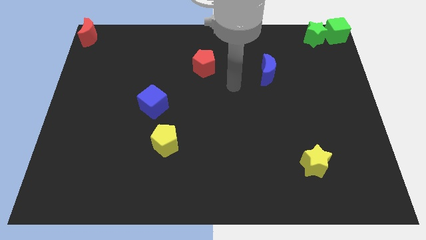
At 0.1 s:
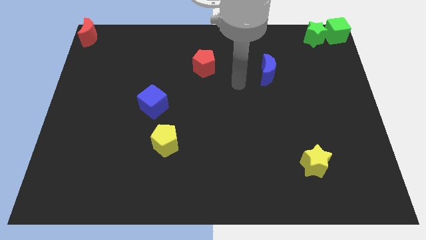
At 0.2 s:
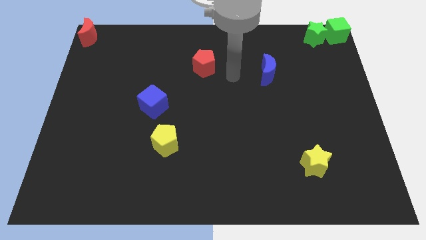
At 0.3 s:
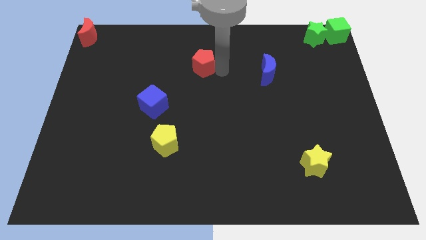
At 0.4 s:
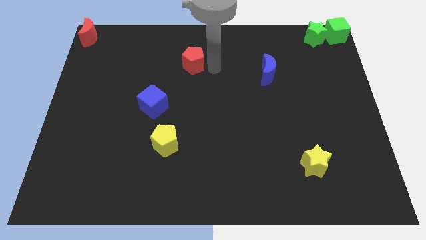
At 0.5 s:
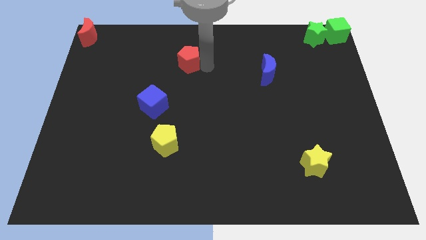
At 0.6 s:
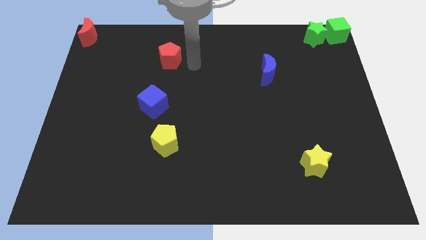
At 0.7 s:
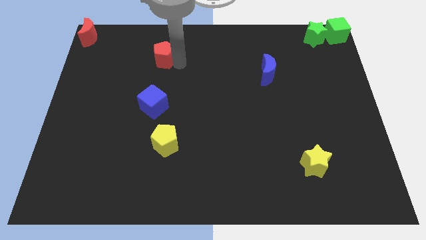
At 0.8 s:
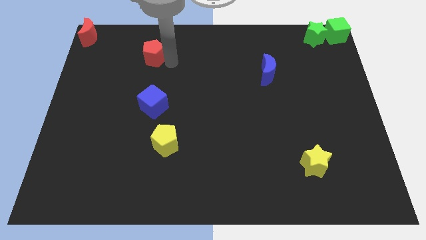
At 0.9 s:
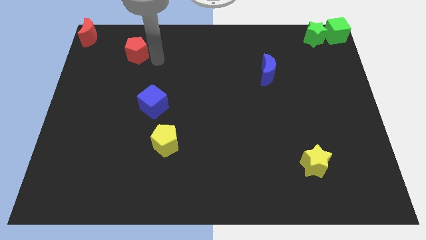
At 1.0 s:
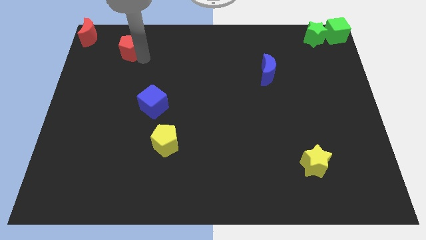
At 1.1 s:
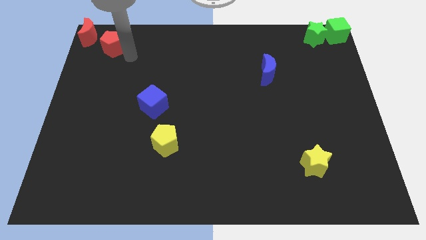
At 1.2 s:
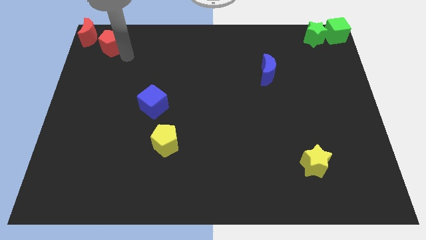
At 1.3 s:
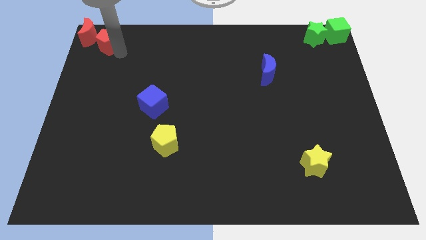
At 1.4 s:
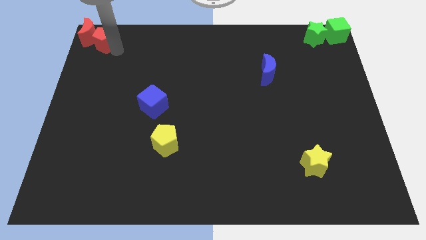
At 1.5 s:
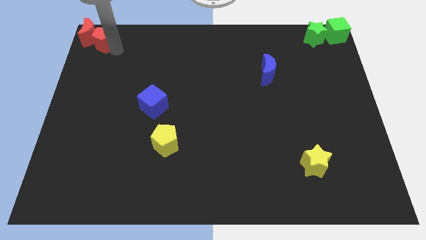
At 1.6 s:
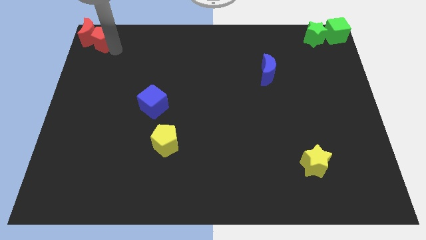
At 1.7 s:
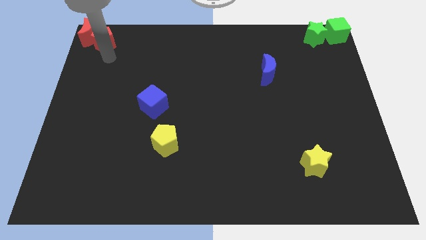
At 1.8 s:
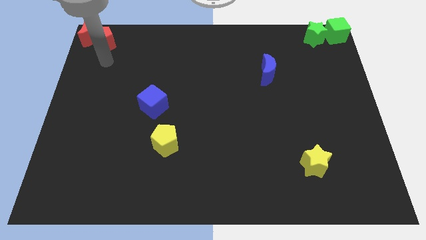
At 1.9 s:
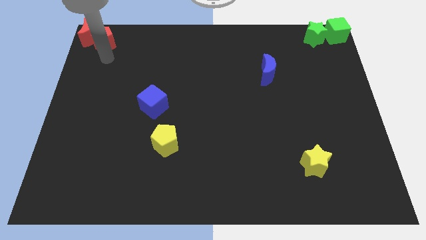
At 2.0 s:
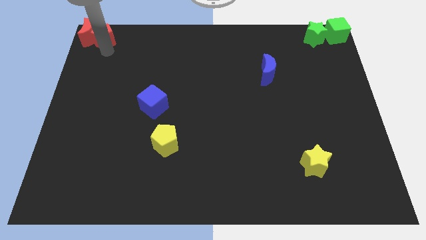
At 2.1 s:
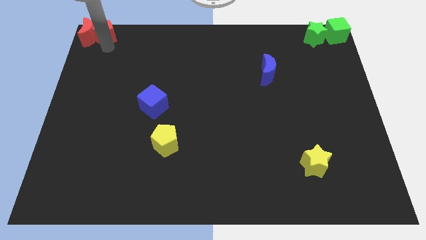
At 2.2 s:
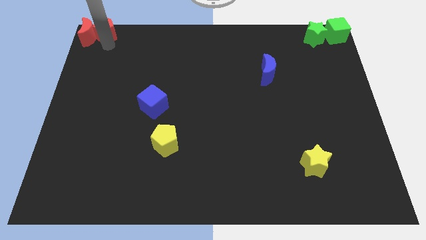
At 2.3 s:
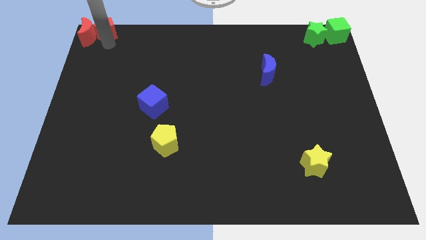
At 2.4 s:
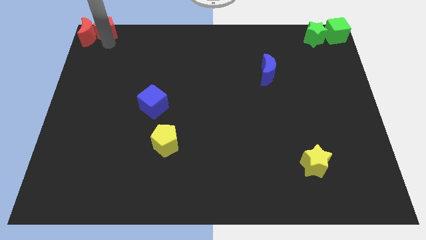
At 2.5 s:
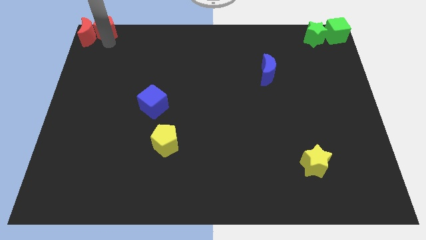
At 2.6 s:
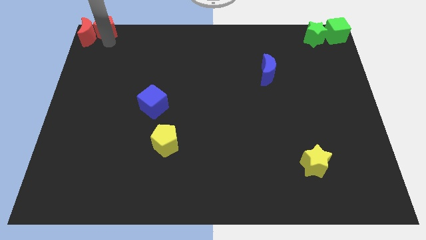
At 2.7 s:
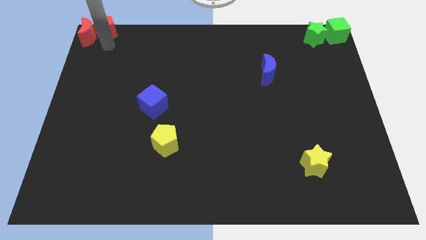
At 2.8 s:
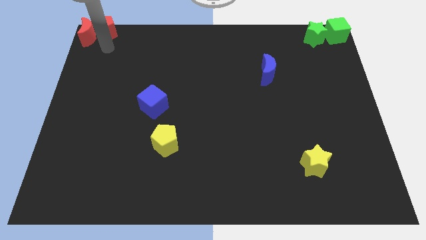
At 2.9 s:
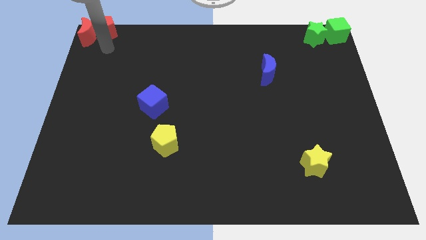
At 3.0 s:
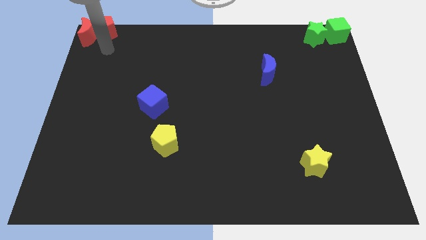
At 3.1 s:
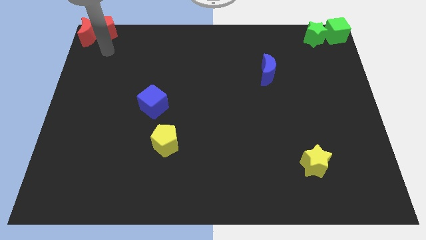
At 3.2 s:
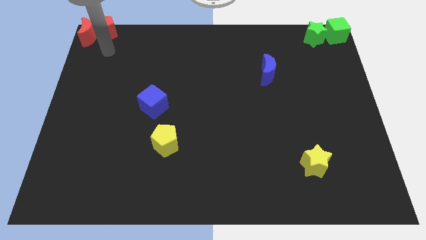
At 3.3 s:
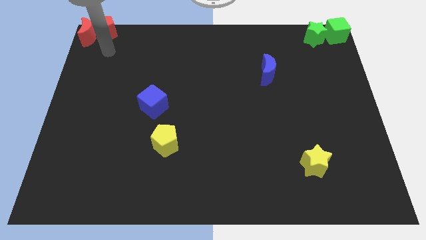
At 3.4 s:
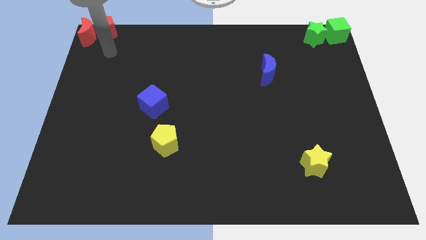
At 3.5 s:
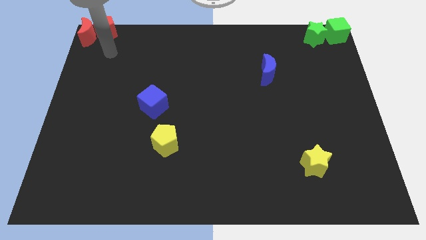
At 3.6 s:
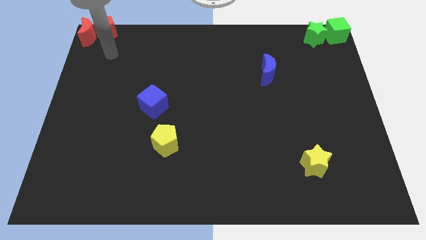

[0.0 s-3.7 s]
slide the red pentagon to the left side of the red crescent

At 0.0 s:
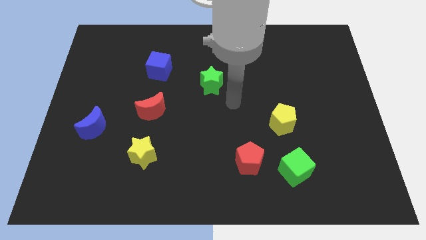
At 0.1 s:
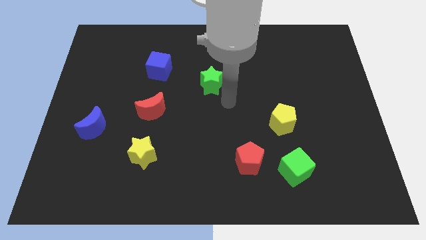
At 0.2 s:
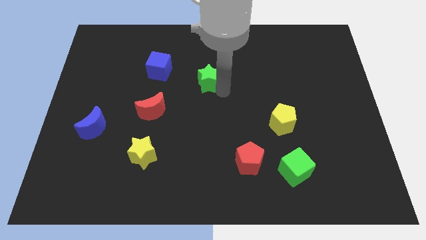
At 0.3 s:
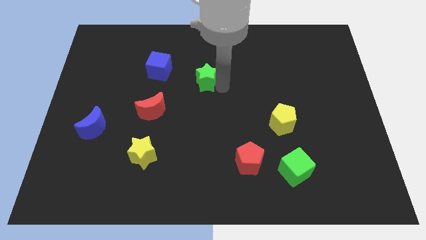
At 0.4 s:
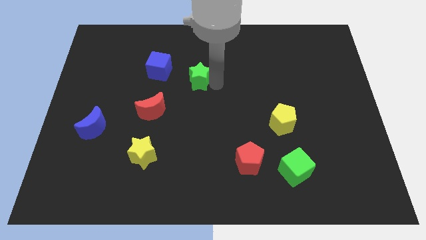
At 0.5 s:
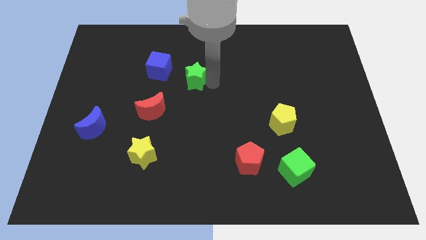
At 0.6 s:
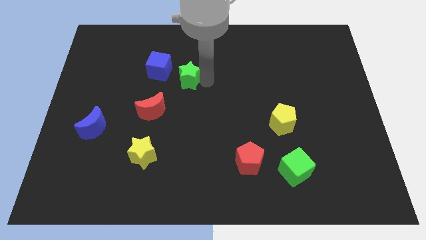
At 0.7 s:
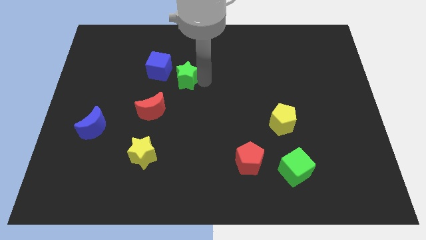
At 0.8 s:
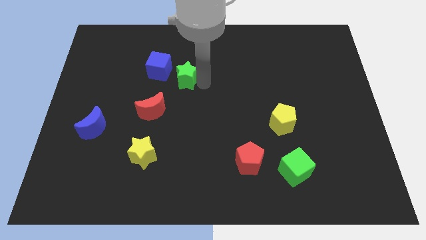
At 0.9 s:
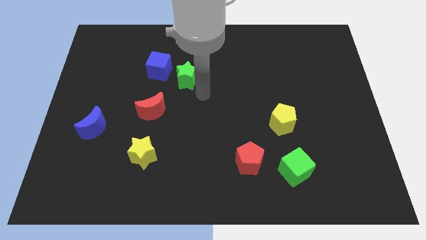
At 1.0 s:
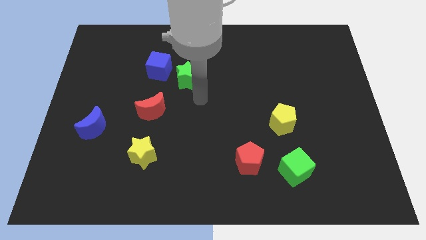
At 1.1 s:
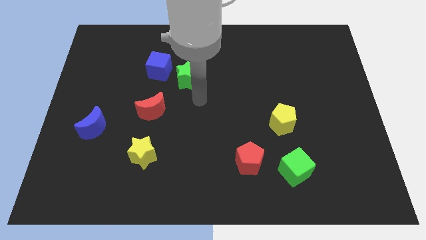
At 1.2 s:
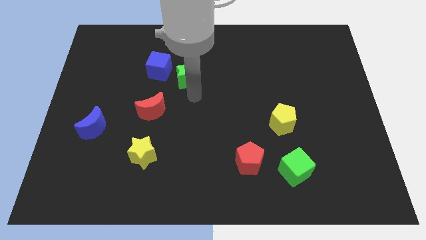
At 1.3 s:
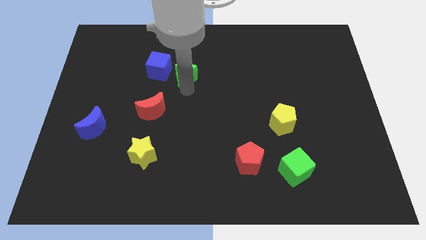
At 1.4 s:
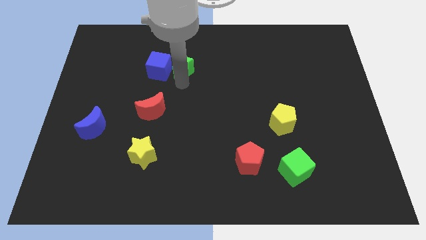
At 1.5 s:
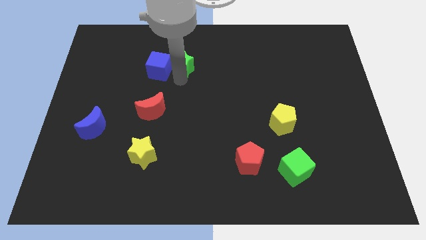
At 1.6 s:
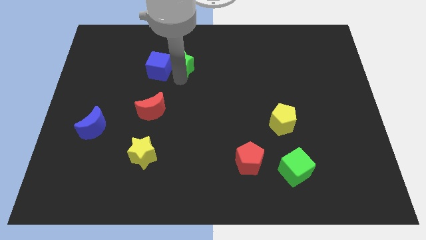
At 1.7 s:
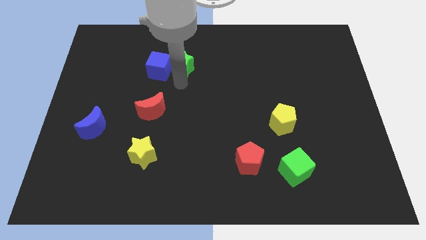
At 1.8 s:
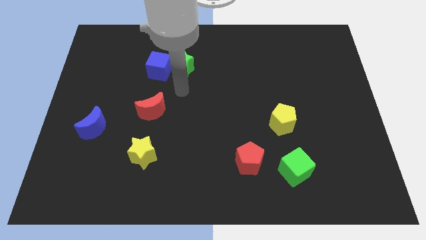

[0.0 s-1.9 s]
place the green star right to the blue cube

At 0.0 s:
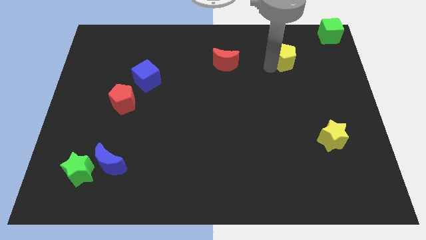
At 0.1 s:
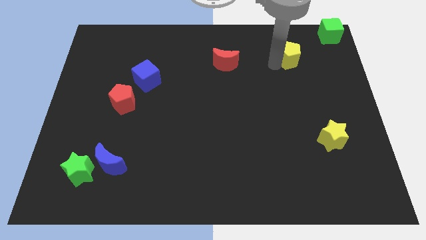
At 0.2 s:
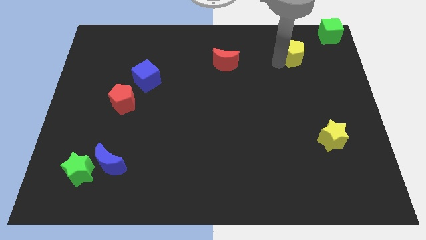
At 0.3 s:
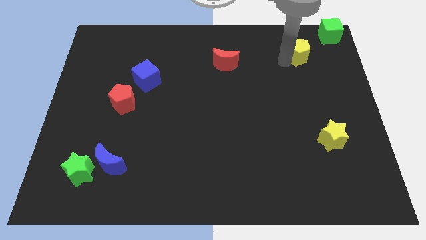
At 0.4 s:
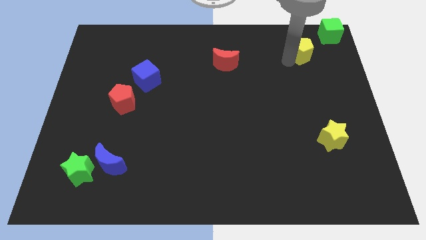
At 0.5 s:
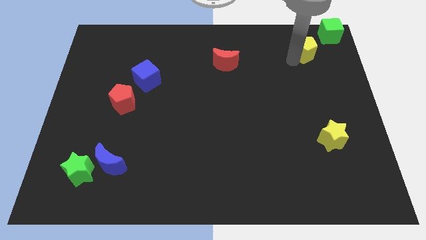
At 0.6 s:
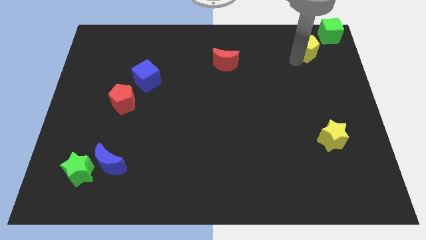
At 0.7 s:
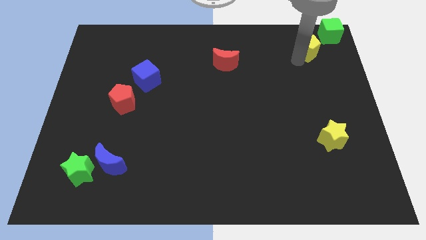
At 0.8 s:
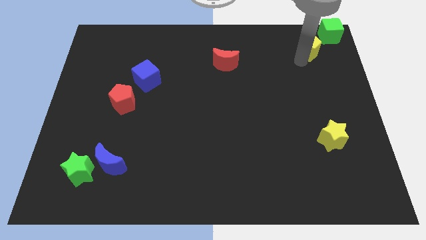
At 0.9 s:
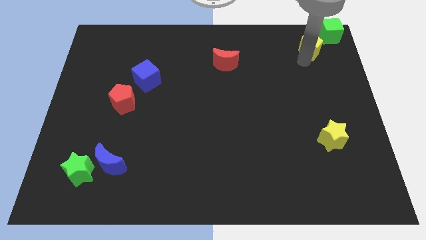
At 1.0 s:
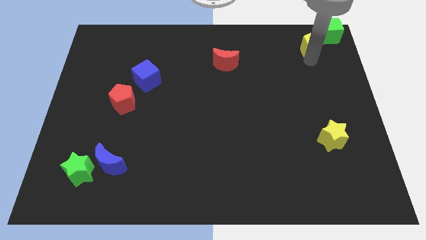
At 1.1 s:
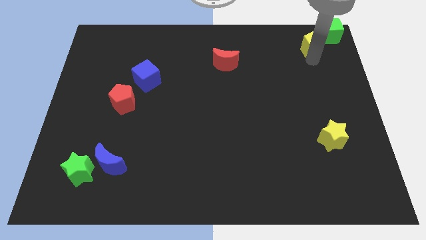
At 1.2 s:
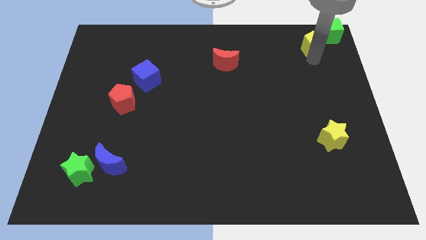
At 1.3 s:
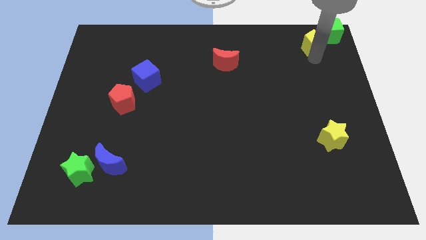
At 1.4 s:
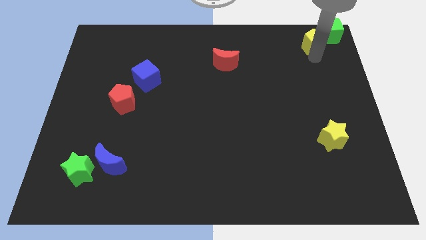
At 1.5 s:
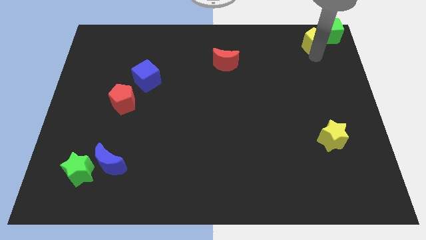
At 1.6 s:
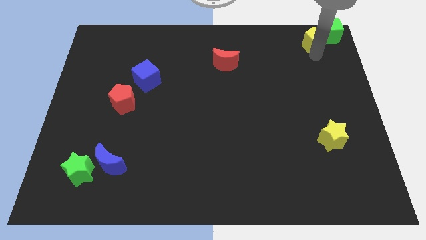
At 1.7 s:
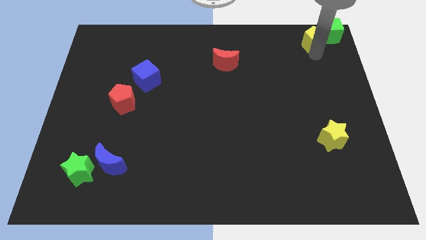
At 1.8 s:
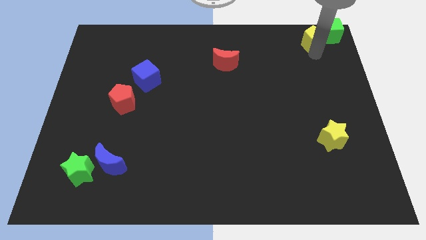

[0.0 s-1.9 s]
push the yellow pentagon to the left of green cube

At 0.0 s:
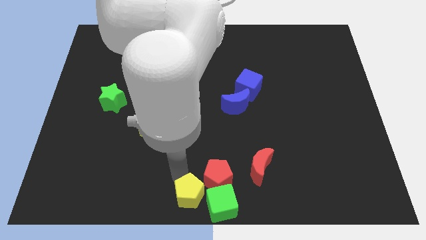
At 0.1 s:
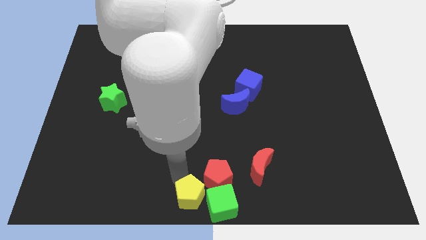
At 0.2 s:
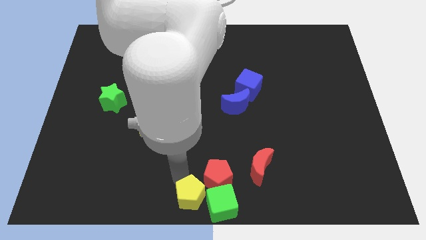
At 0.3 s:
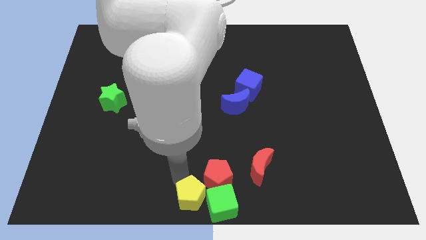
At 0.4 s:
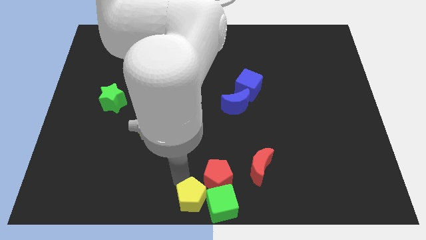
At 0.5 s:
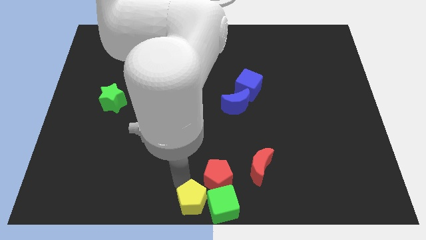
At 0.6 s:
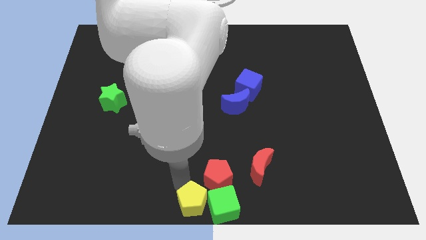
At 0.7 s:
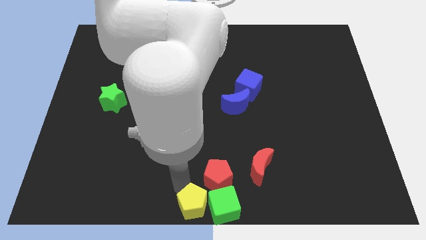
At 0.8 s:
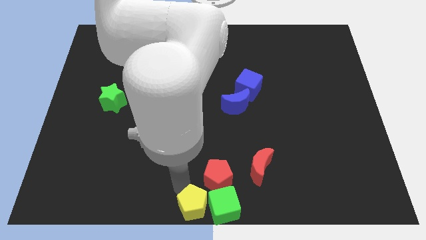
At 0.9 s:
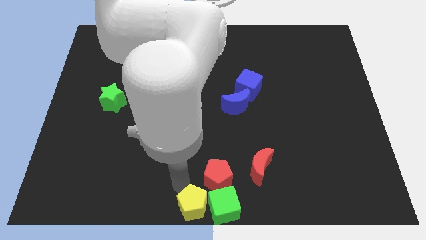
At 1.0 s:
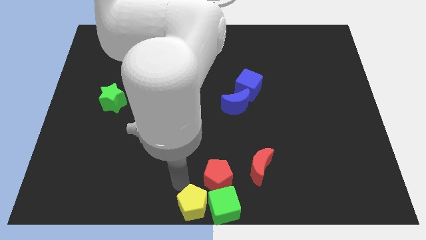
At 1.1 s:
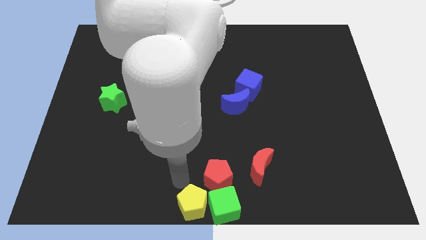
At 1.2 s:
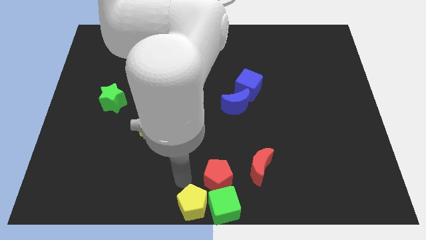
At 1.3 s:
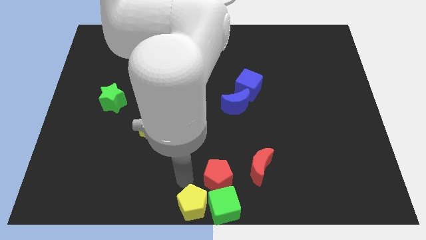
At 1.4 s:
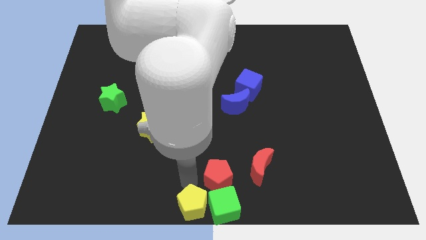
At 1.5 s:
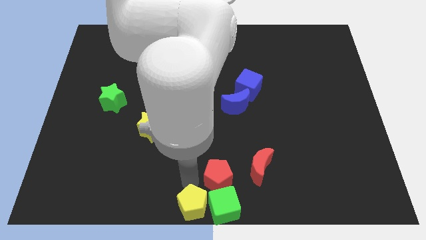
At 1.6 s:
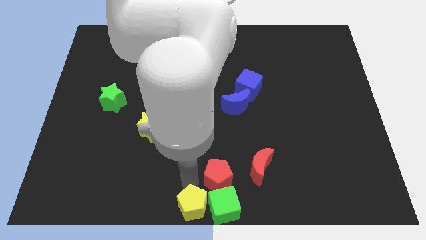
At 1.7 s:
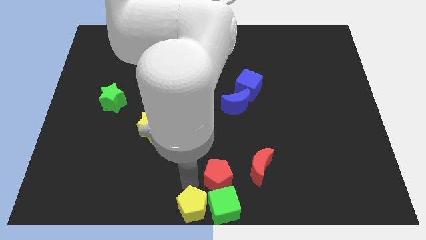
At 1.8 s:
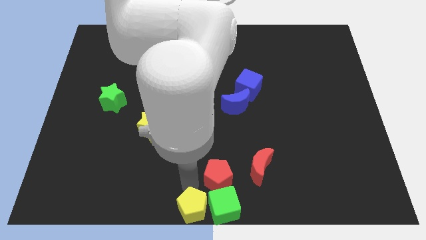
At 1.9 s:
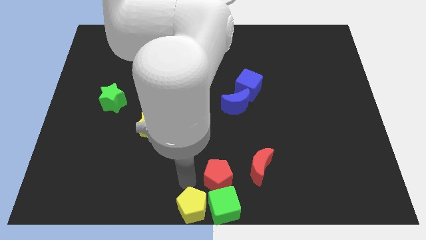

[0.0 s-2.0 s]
move the yellow pentagon to the bottom center
